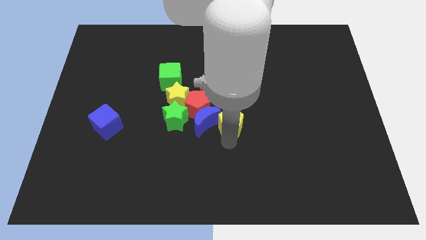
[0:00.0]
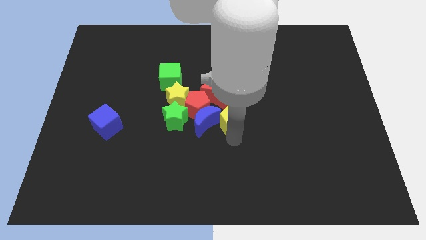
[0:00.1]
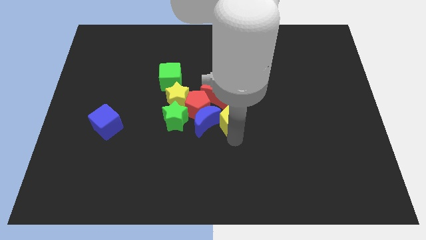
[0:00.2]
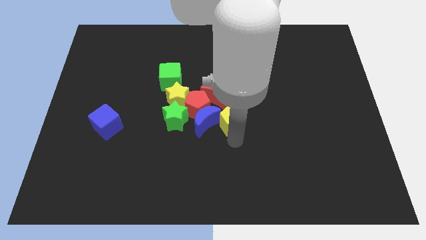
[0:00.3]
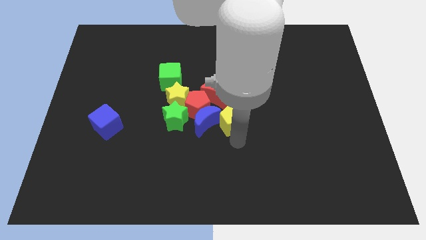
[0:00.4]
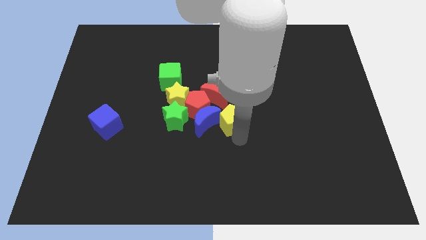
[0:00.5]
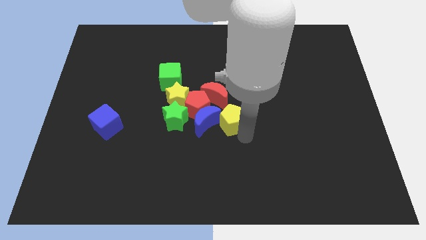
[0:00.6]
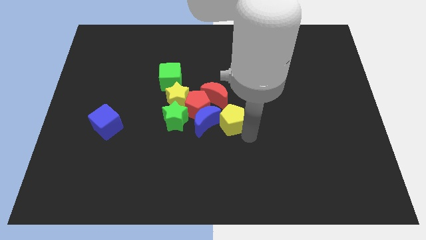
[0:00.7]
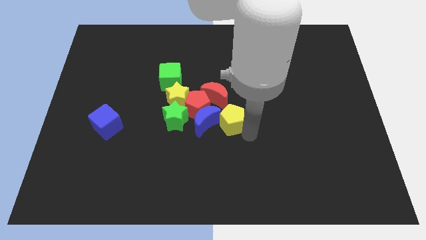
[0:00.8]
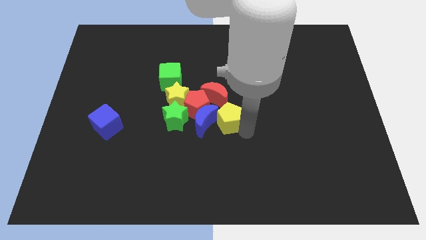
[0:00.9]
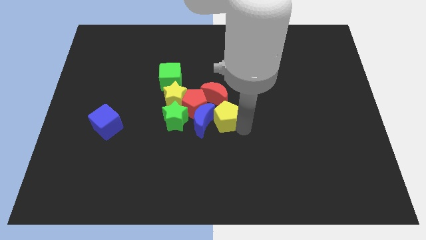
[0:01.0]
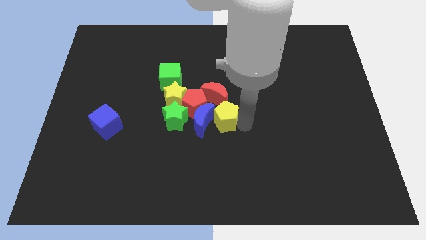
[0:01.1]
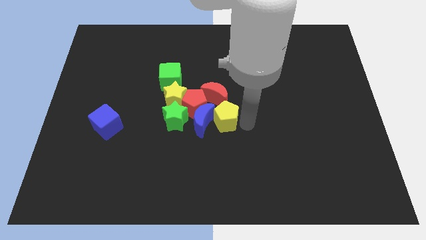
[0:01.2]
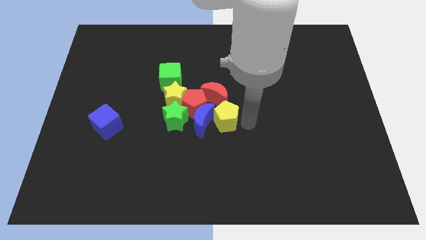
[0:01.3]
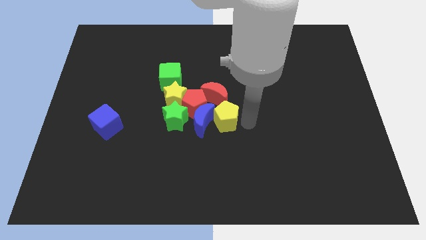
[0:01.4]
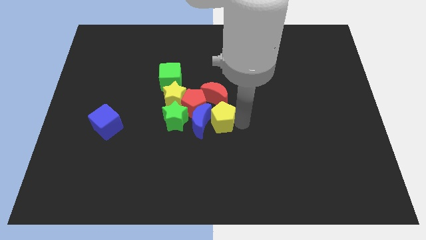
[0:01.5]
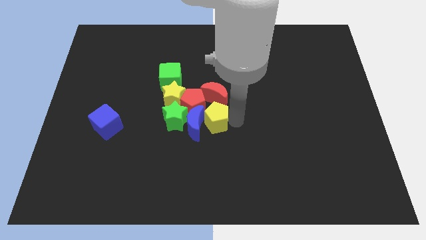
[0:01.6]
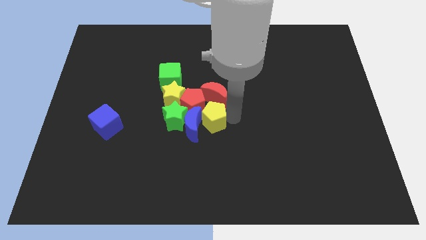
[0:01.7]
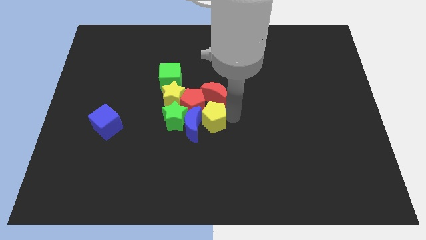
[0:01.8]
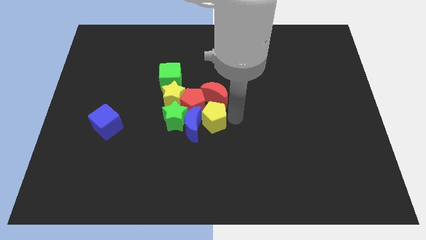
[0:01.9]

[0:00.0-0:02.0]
move the yellow pentagon right to the blue crescent

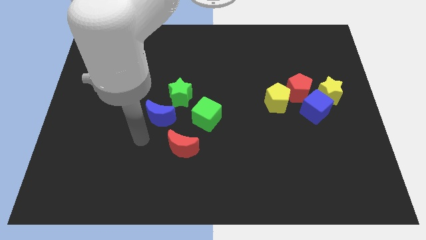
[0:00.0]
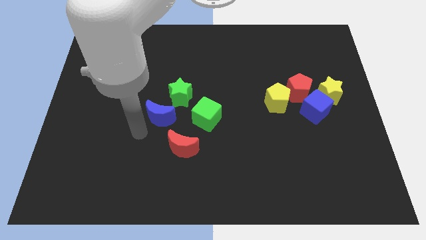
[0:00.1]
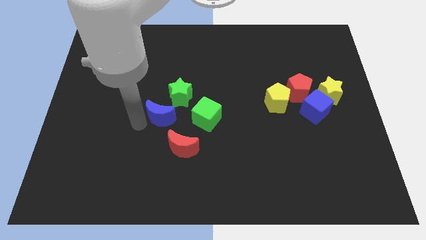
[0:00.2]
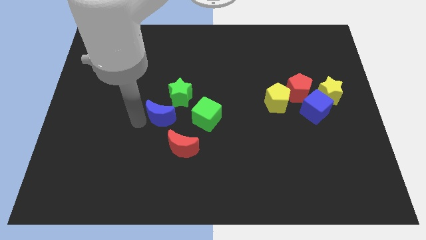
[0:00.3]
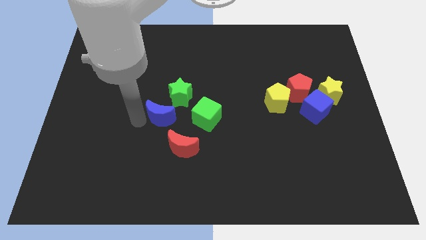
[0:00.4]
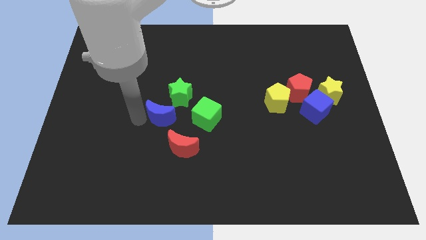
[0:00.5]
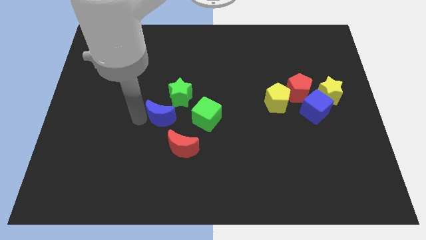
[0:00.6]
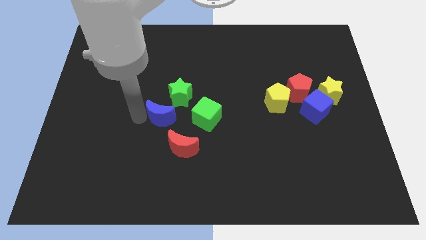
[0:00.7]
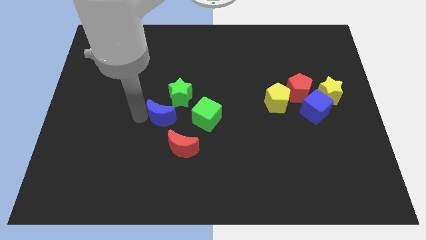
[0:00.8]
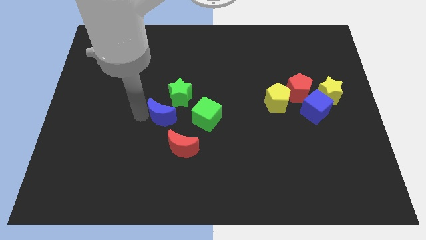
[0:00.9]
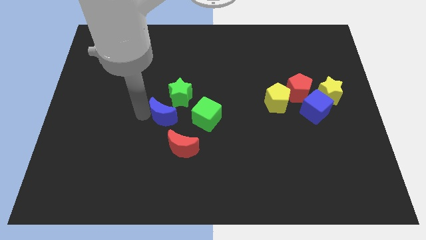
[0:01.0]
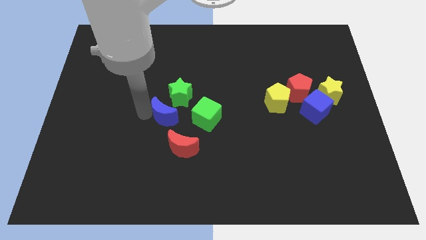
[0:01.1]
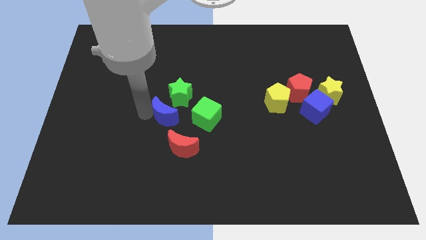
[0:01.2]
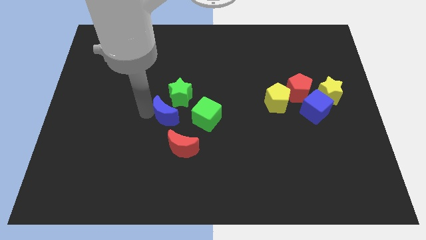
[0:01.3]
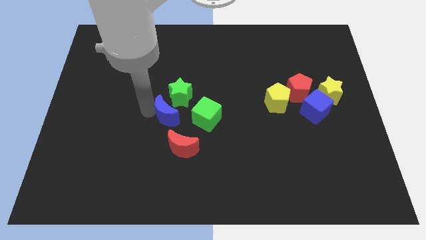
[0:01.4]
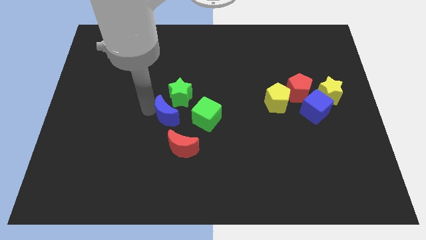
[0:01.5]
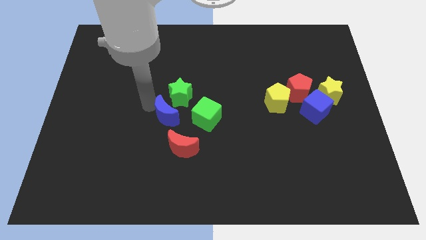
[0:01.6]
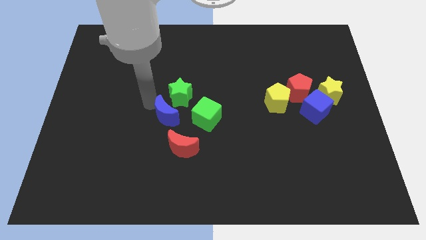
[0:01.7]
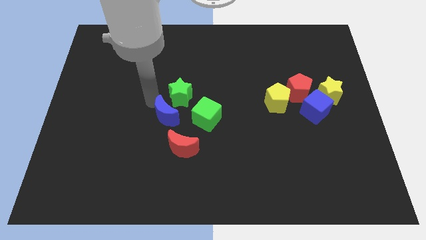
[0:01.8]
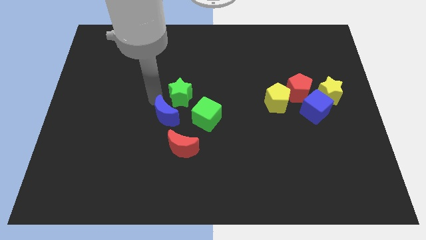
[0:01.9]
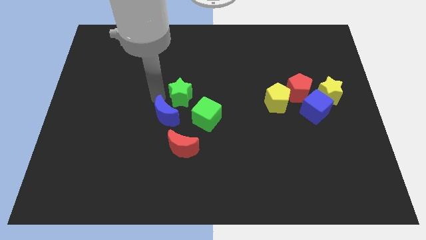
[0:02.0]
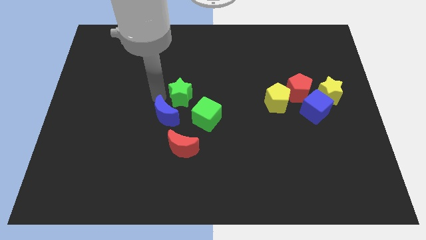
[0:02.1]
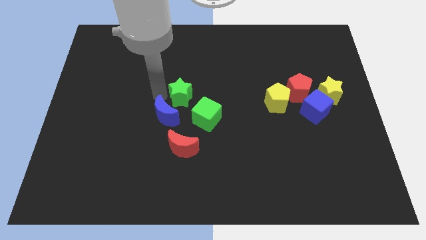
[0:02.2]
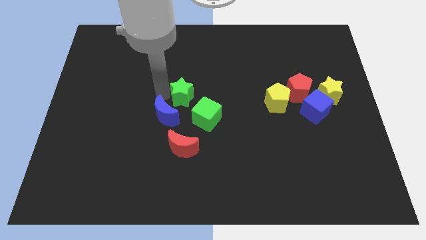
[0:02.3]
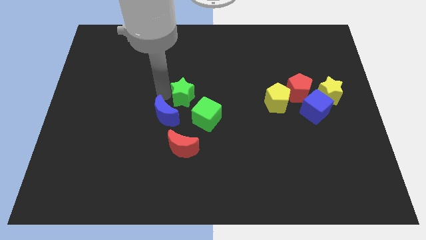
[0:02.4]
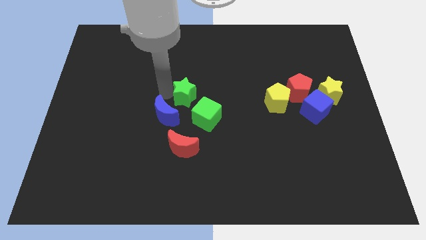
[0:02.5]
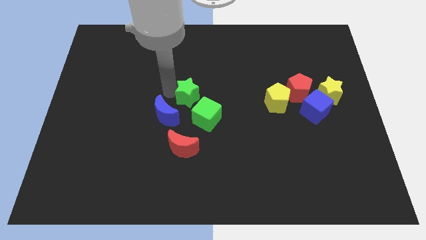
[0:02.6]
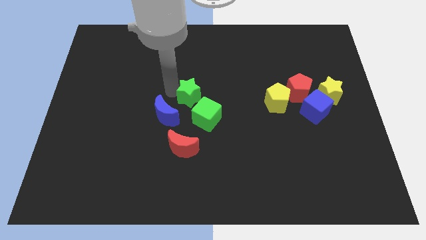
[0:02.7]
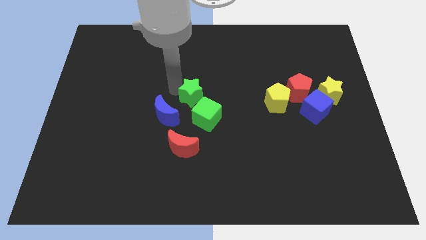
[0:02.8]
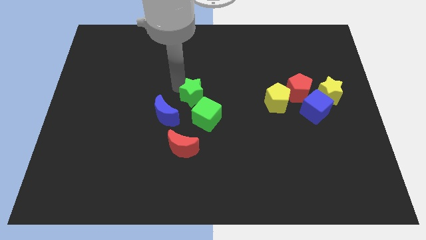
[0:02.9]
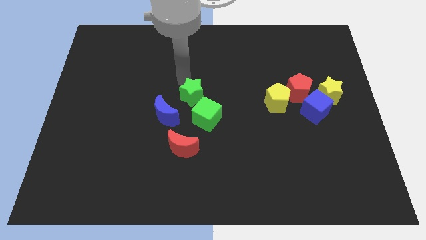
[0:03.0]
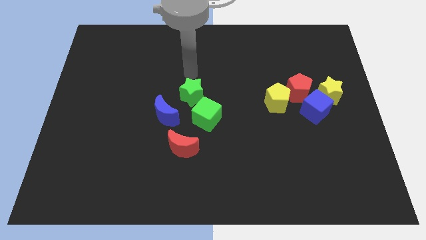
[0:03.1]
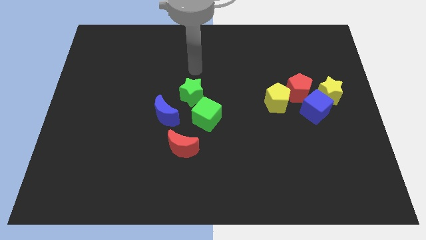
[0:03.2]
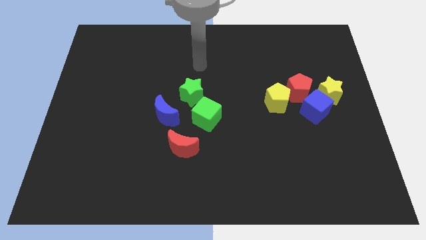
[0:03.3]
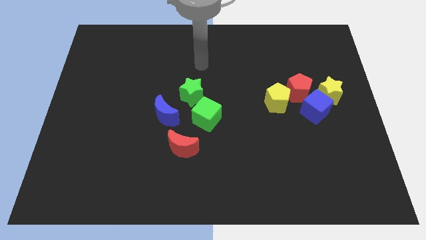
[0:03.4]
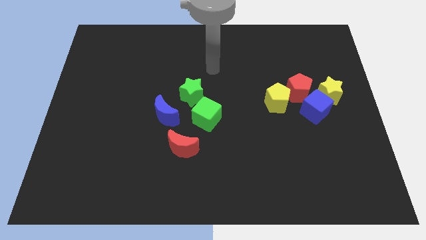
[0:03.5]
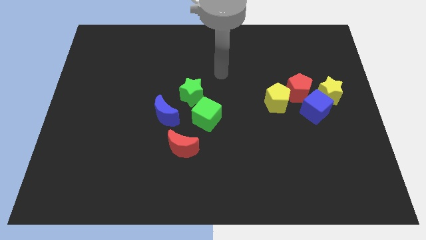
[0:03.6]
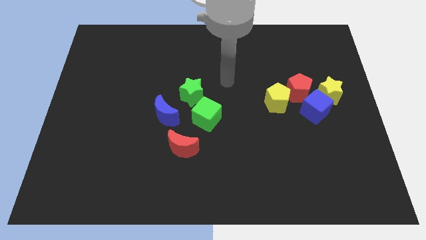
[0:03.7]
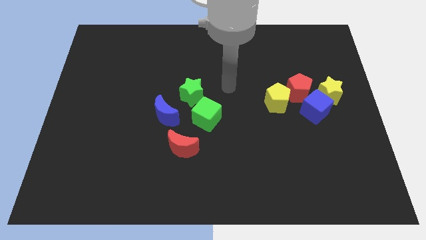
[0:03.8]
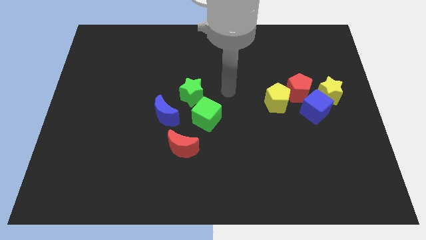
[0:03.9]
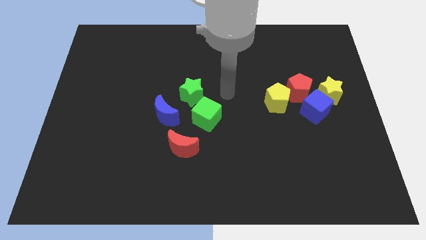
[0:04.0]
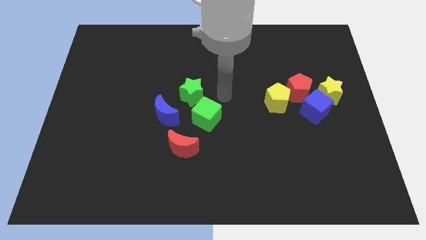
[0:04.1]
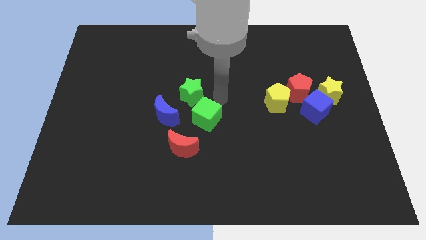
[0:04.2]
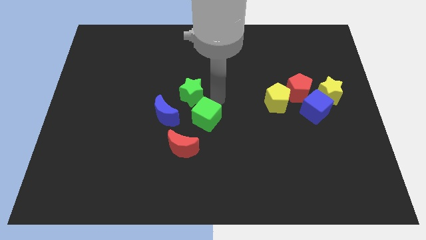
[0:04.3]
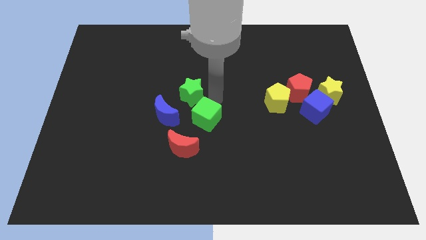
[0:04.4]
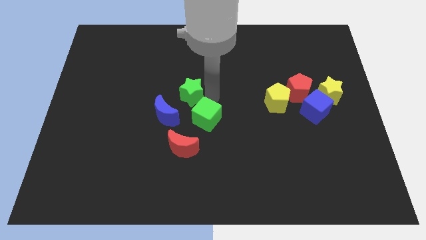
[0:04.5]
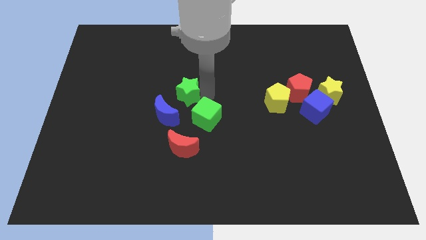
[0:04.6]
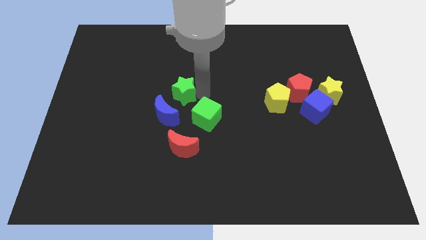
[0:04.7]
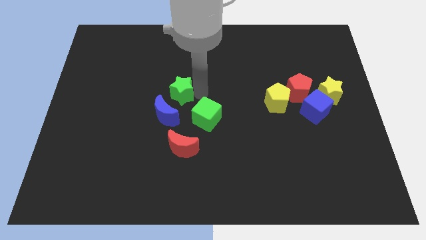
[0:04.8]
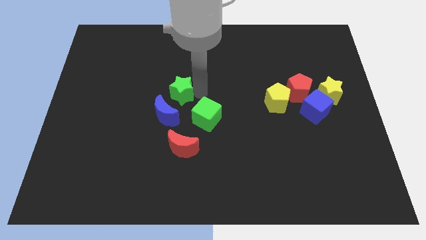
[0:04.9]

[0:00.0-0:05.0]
adjust the green star to the top left of green cube

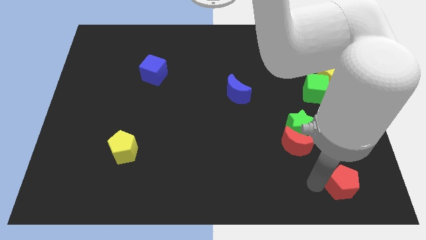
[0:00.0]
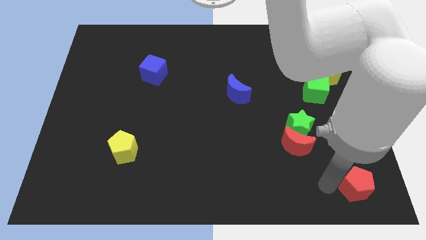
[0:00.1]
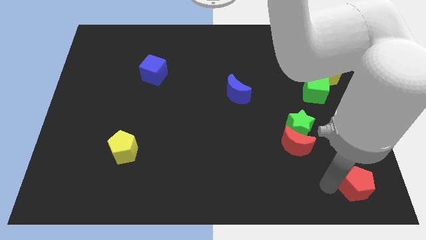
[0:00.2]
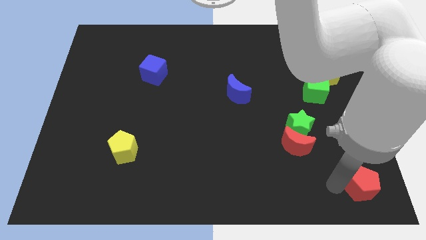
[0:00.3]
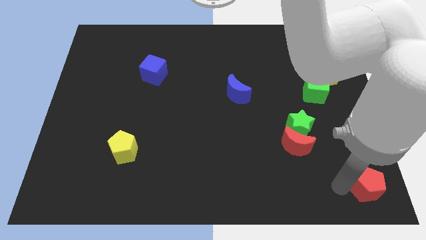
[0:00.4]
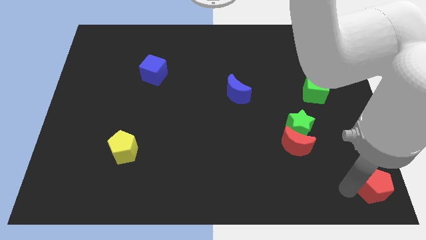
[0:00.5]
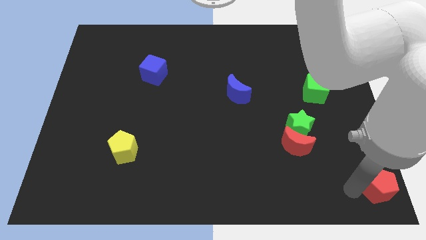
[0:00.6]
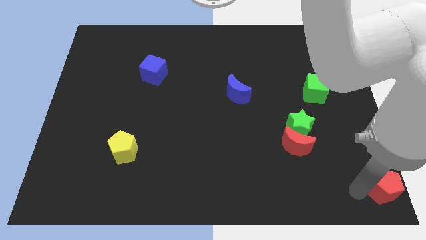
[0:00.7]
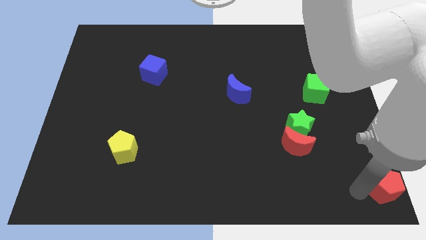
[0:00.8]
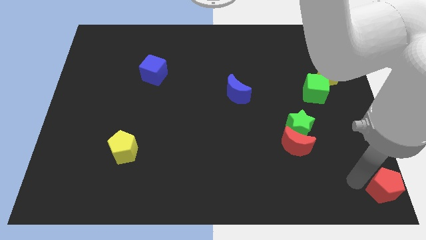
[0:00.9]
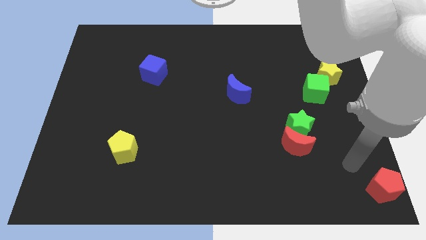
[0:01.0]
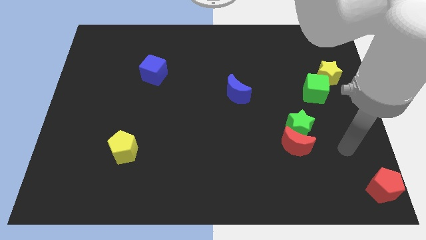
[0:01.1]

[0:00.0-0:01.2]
move the red pentagon to the right bottom of the board

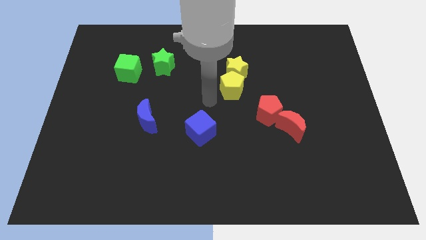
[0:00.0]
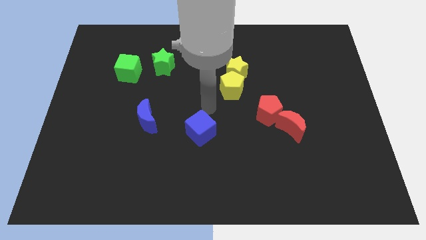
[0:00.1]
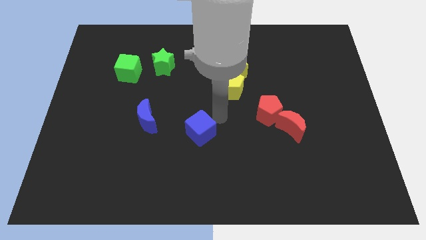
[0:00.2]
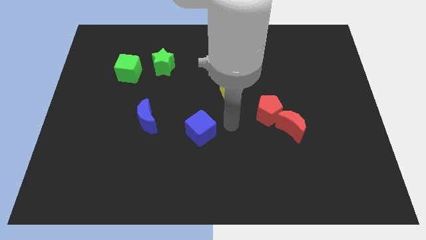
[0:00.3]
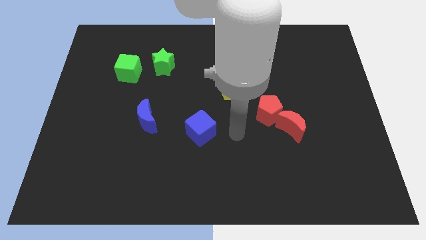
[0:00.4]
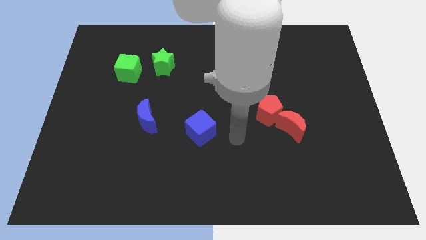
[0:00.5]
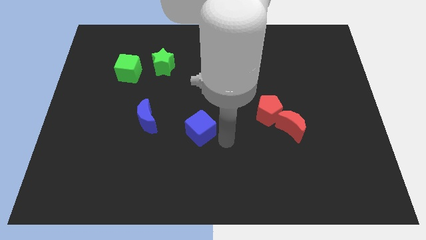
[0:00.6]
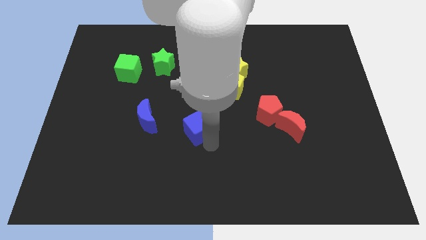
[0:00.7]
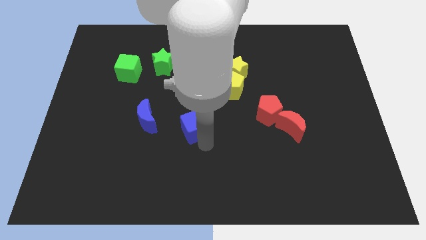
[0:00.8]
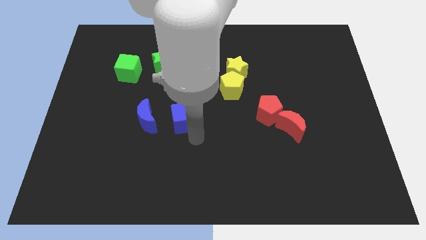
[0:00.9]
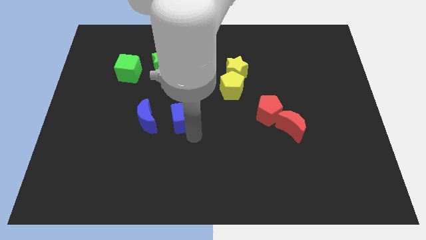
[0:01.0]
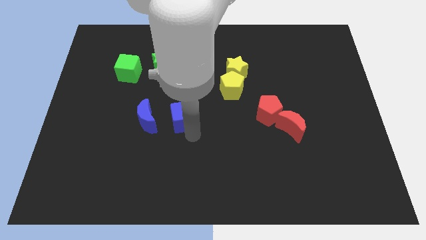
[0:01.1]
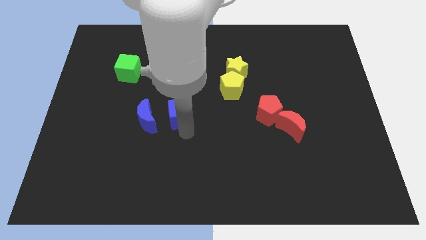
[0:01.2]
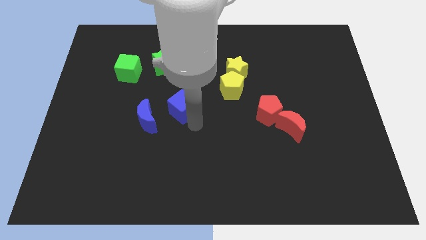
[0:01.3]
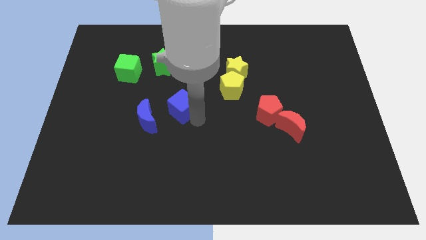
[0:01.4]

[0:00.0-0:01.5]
place the blue cube right to the blue moon
